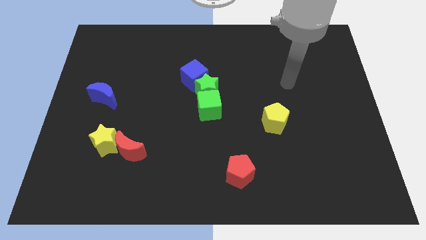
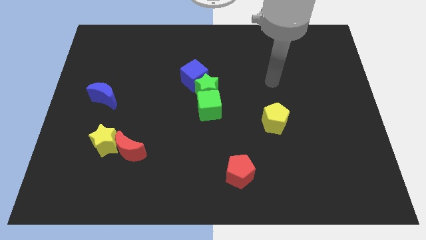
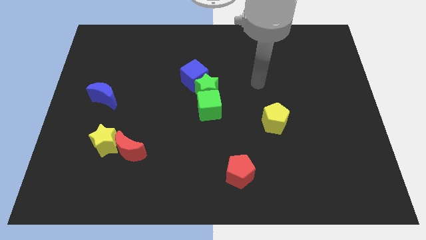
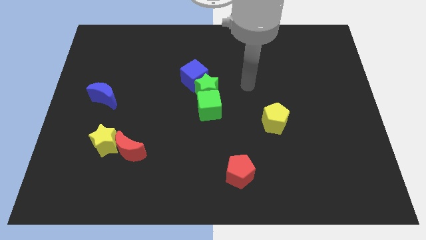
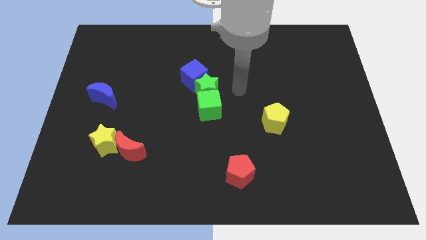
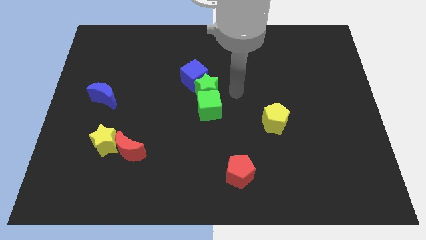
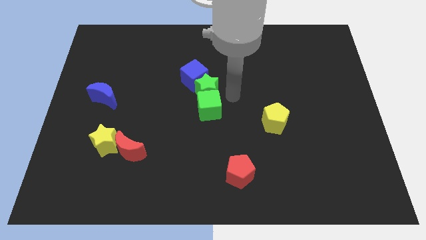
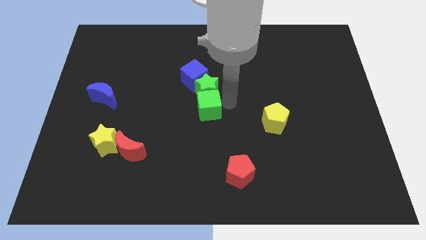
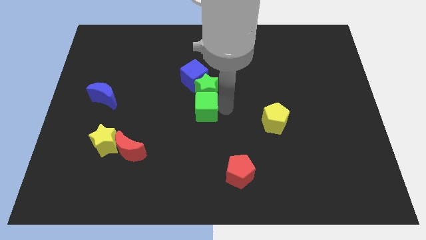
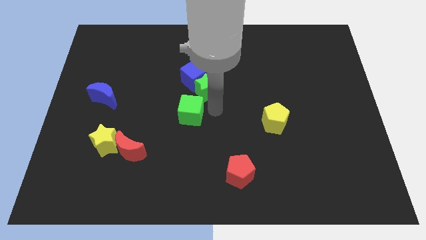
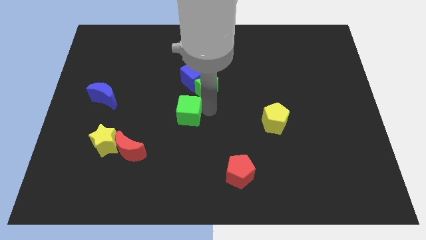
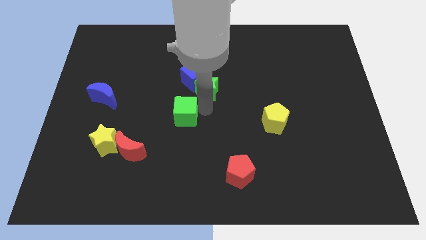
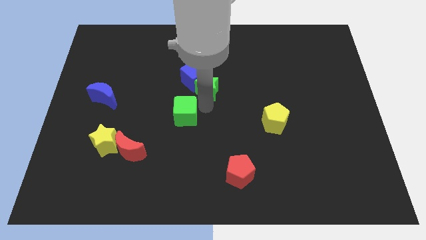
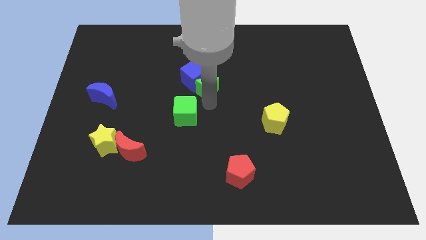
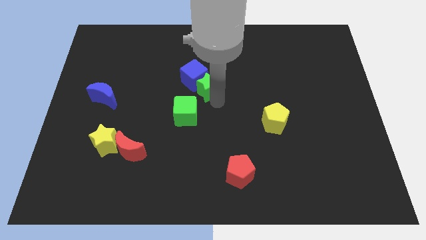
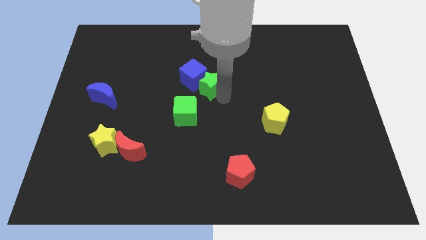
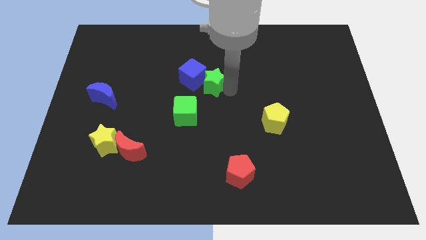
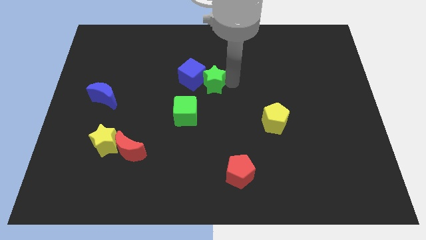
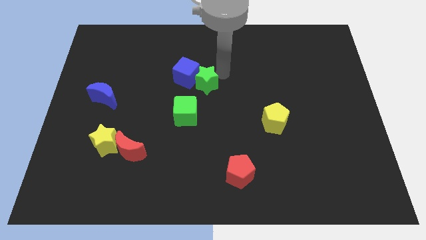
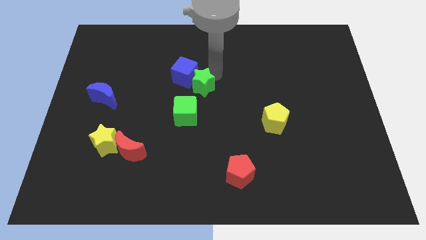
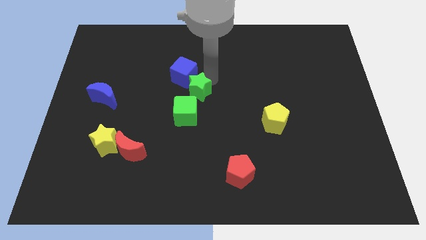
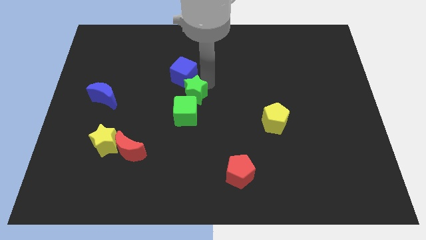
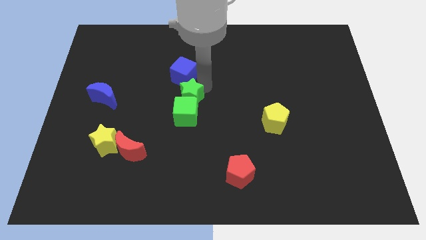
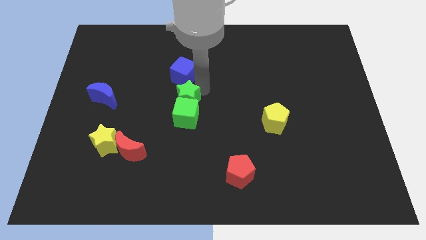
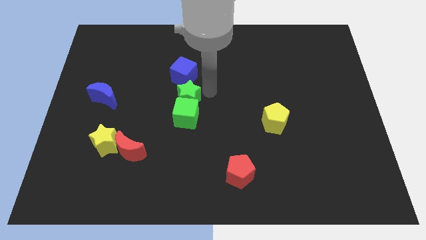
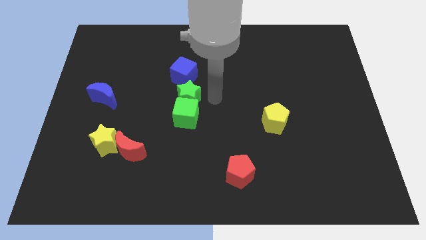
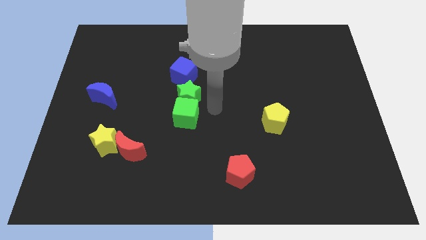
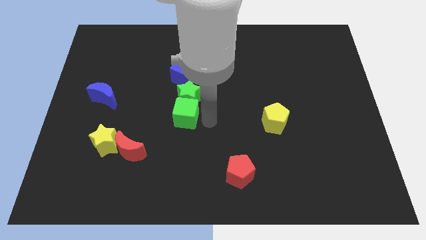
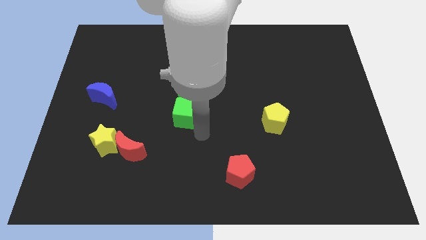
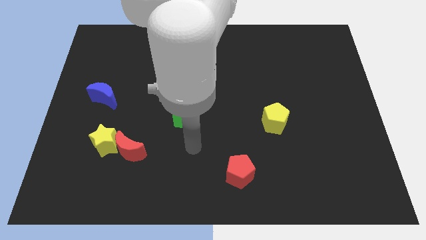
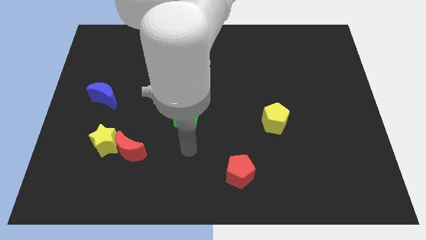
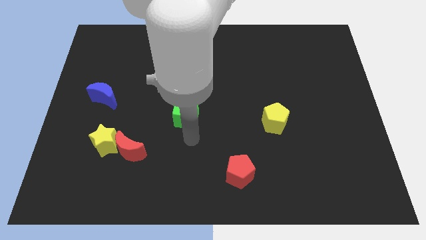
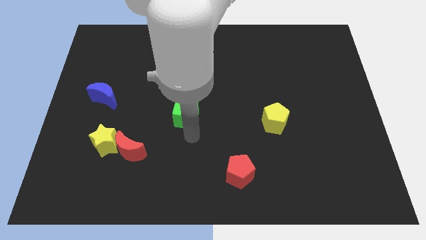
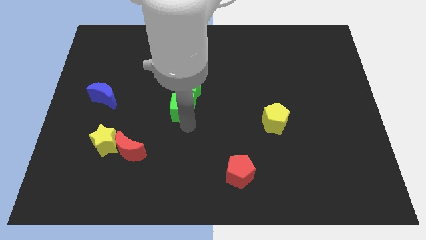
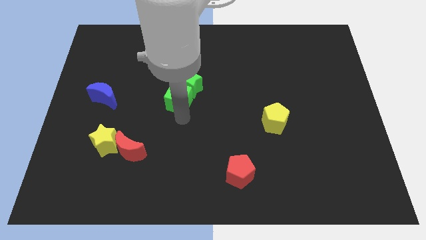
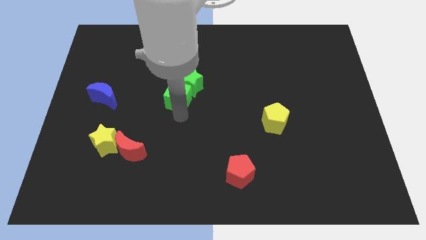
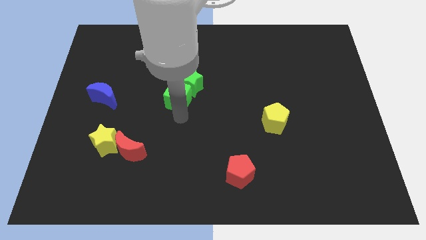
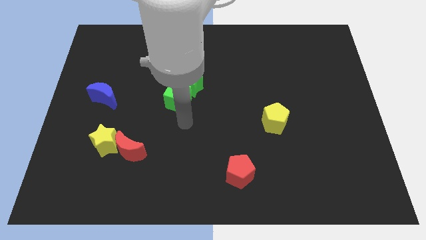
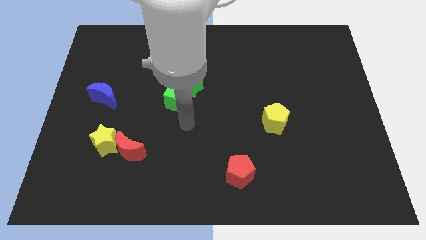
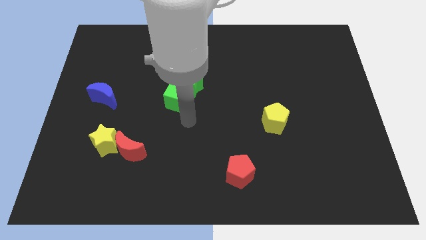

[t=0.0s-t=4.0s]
push the green cube into green star

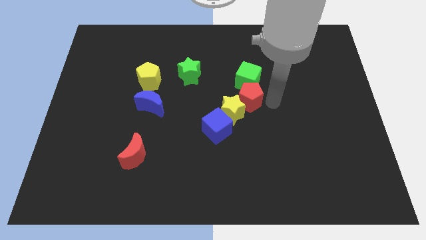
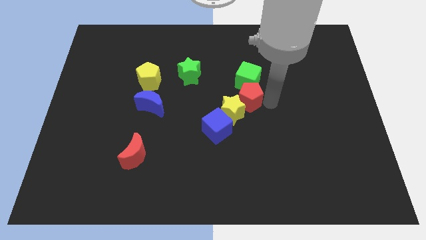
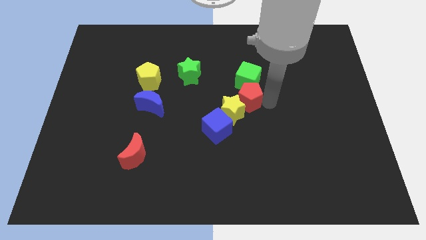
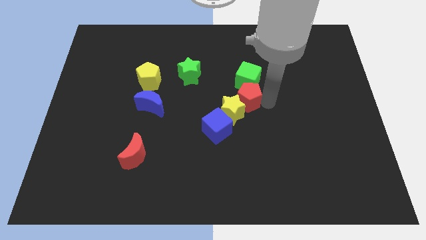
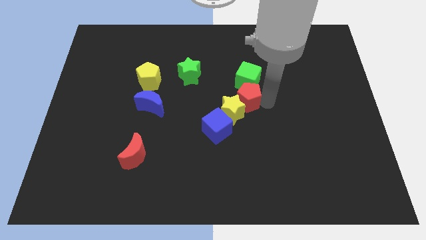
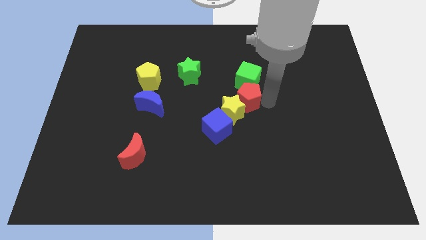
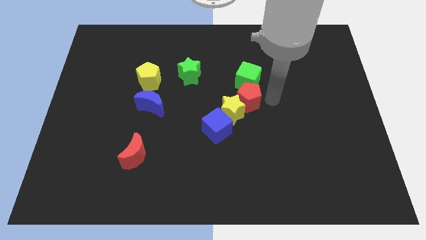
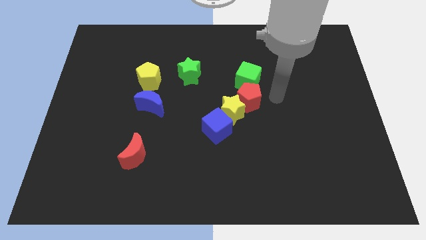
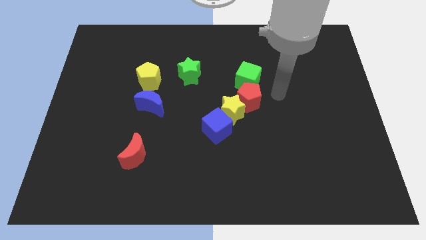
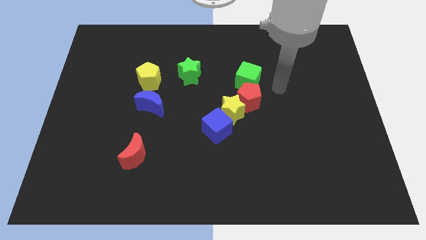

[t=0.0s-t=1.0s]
slightly touch the red pentagon to the right

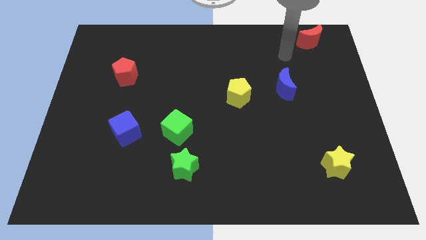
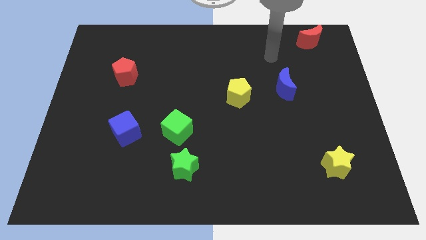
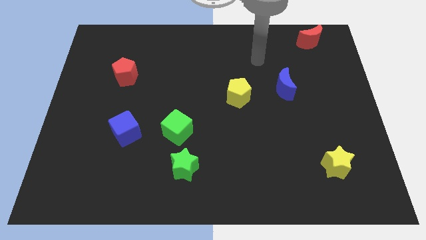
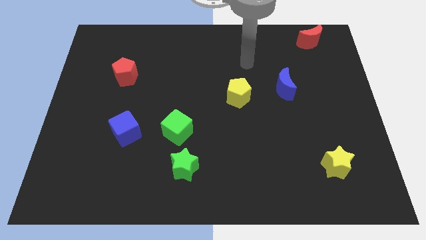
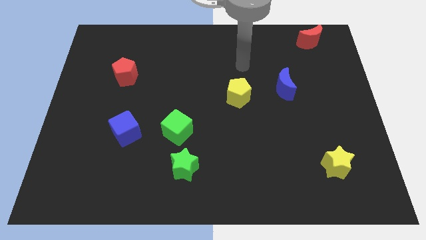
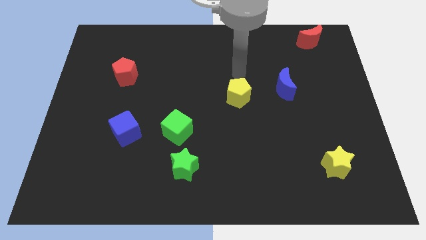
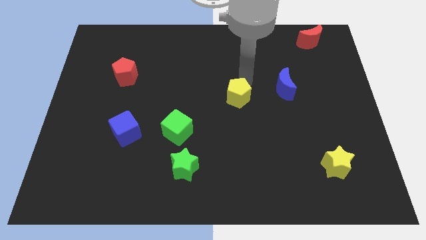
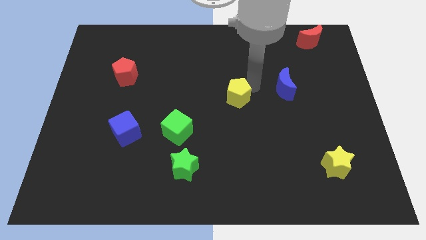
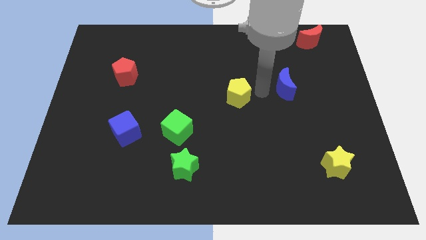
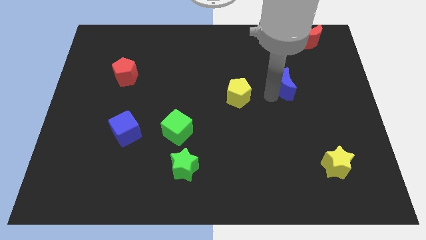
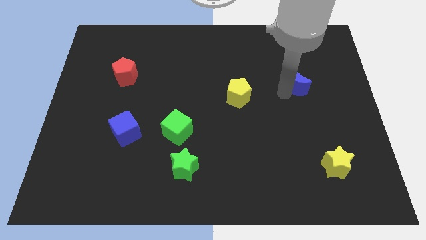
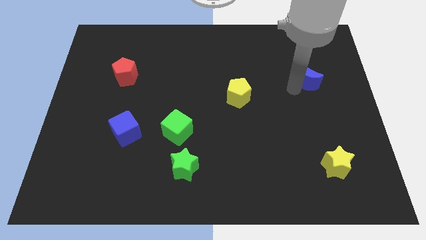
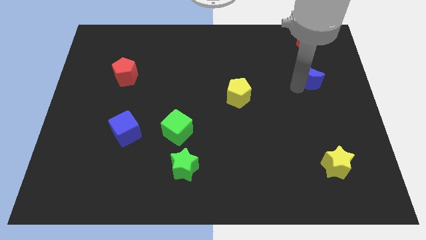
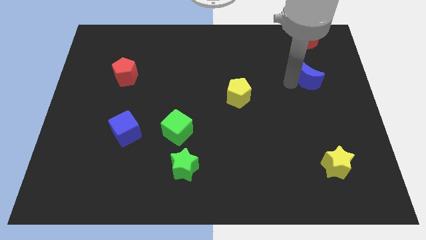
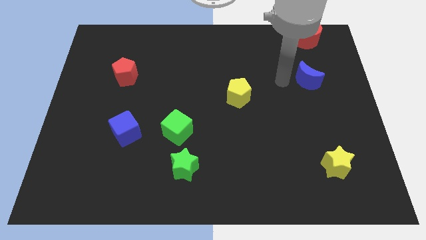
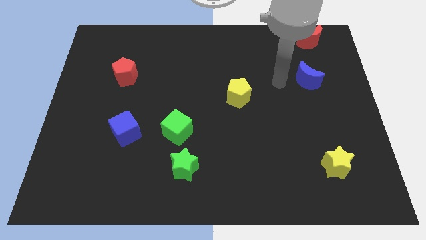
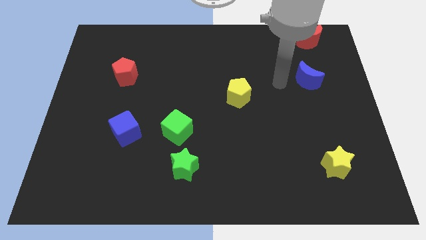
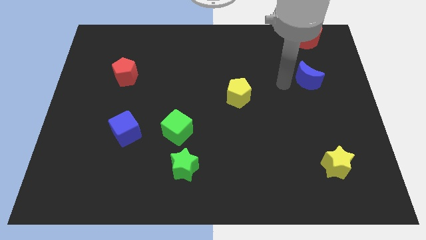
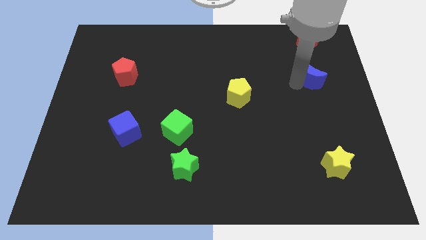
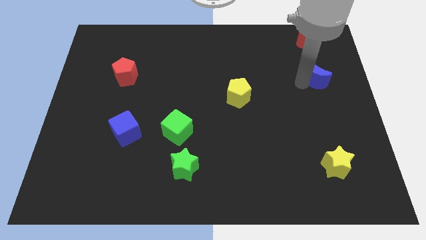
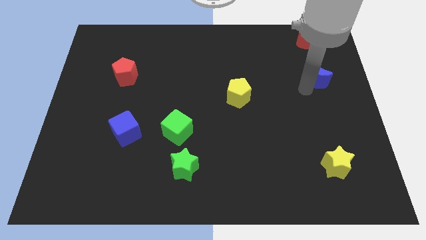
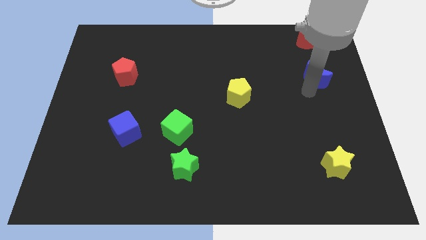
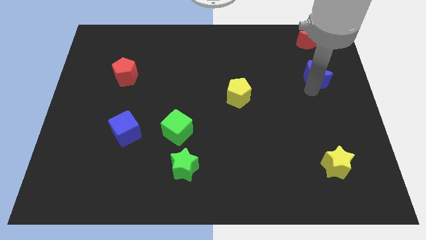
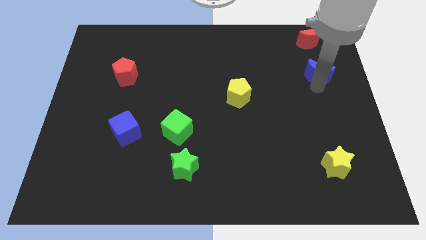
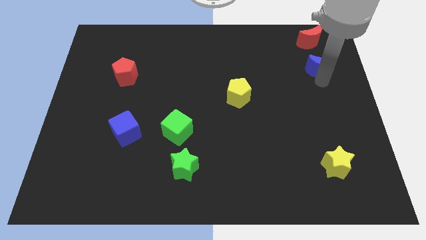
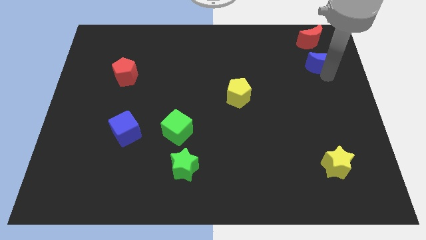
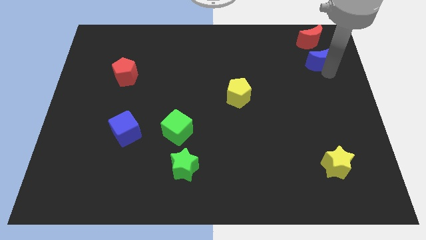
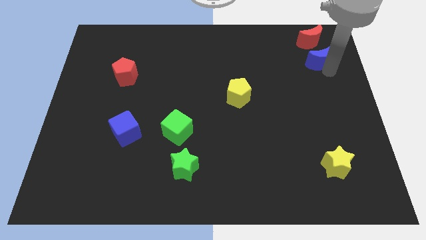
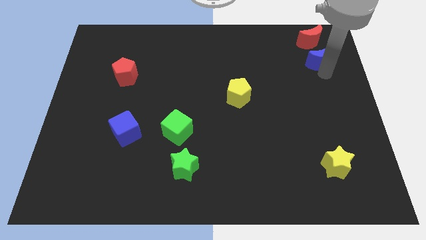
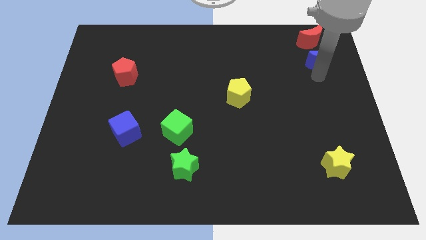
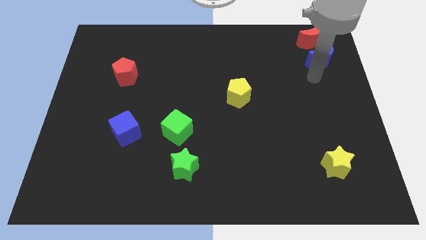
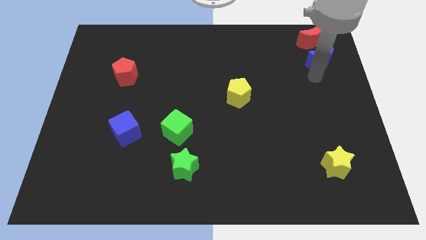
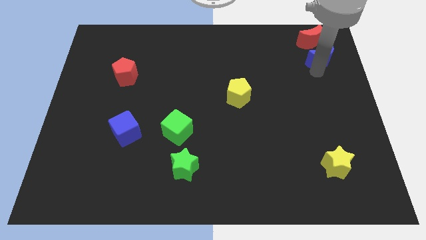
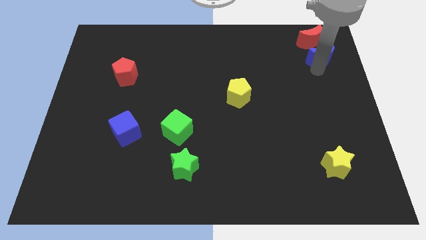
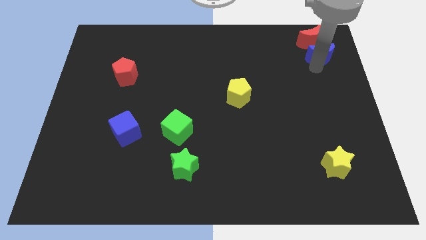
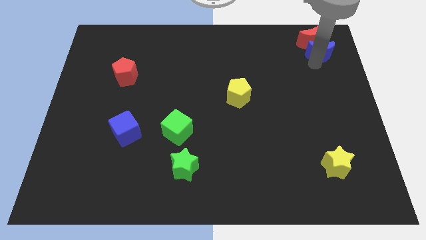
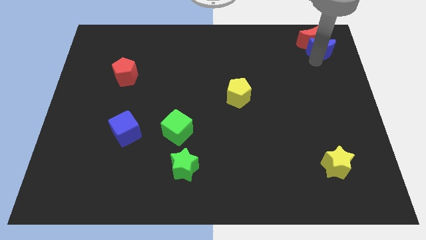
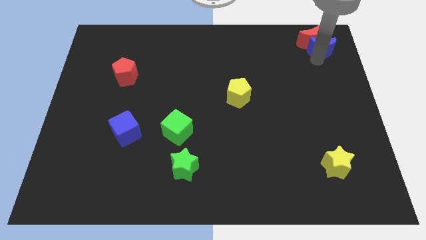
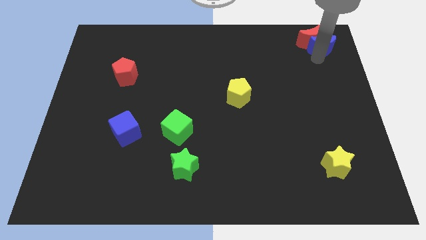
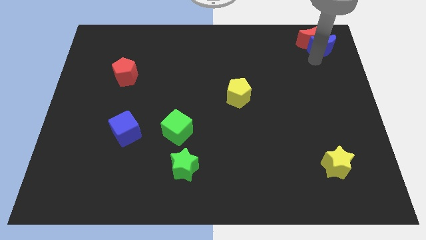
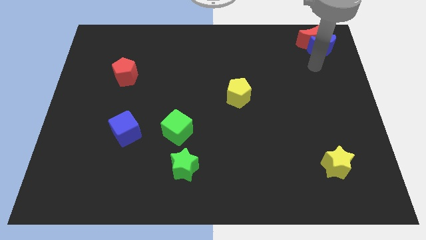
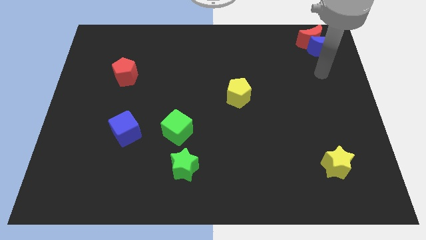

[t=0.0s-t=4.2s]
move the blue crescent below the red crescent
